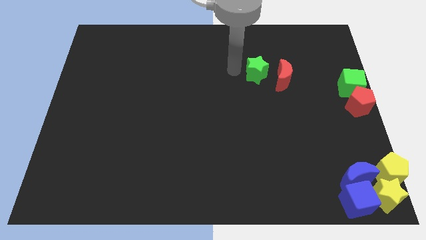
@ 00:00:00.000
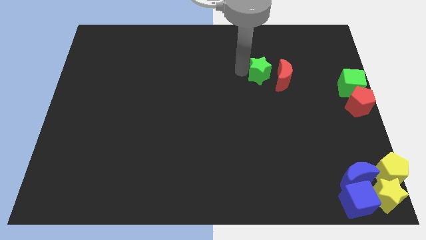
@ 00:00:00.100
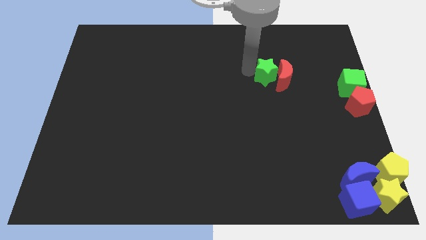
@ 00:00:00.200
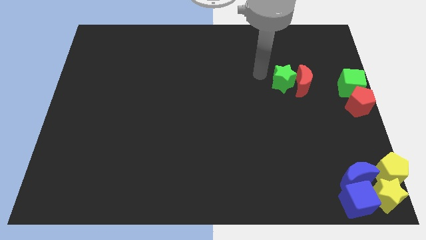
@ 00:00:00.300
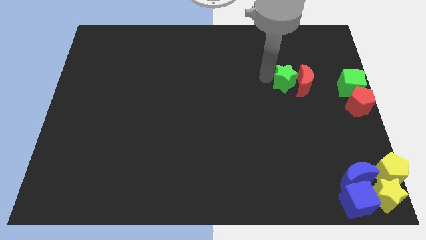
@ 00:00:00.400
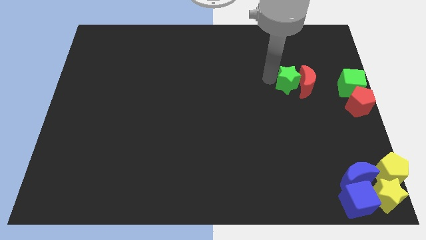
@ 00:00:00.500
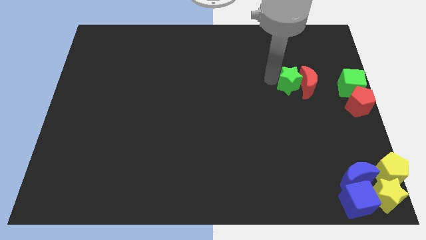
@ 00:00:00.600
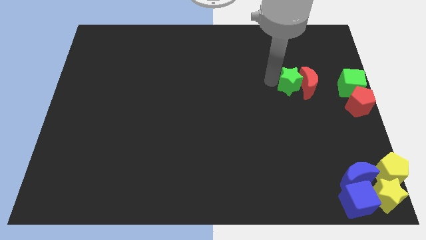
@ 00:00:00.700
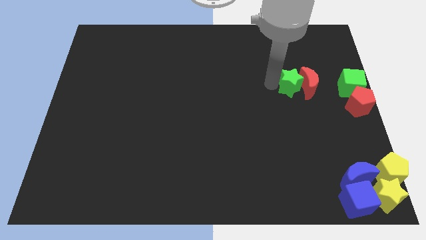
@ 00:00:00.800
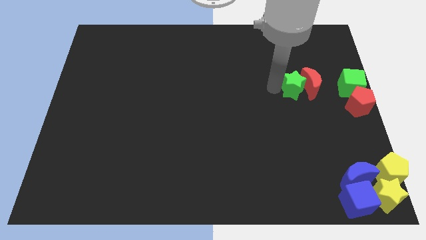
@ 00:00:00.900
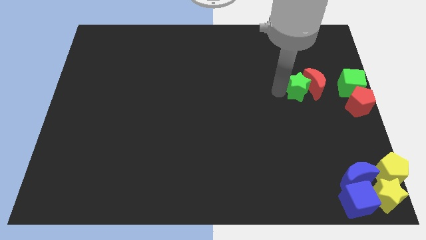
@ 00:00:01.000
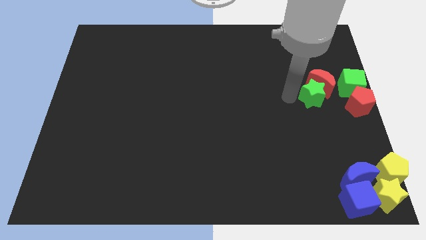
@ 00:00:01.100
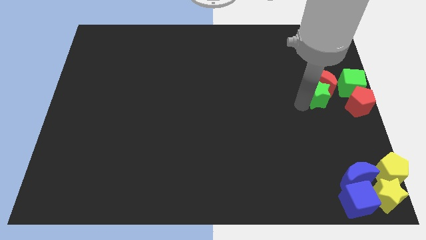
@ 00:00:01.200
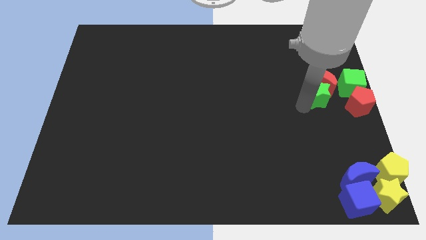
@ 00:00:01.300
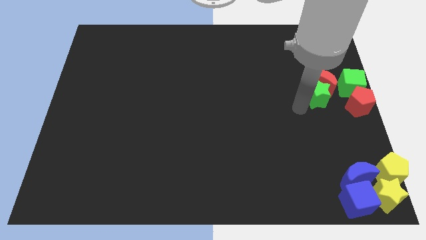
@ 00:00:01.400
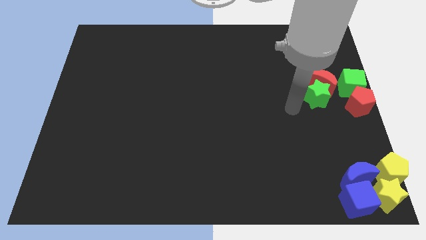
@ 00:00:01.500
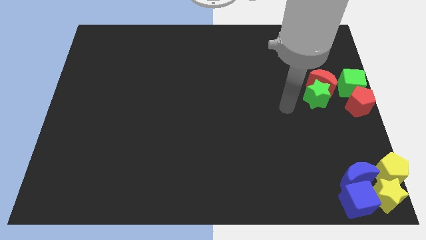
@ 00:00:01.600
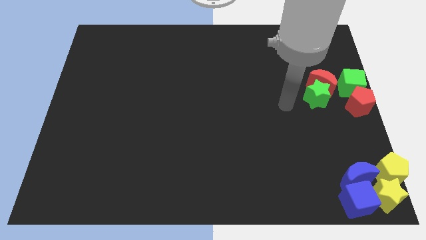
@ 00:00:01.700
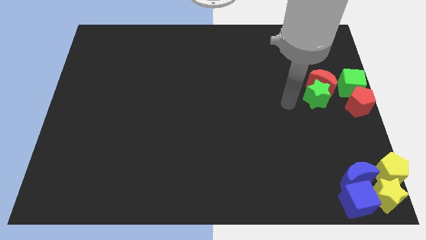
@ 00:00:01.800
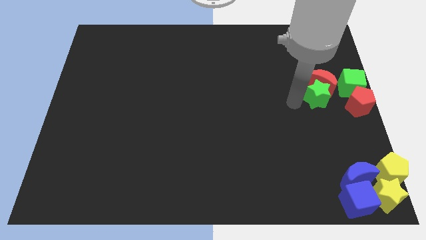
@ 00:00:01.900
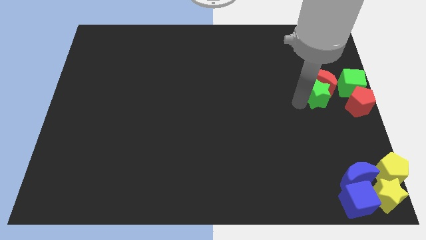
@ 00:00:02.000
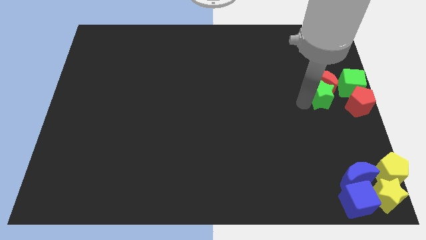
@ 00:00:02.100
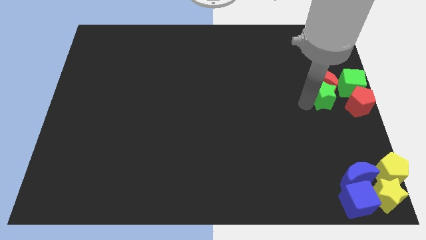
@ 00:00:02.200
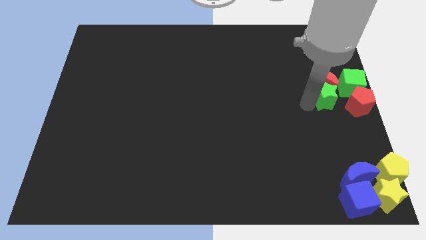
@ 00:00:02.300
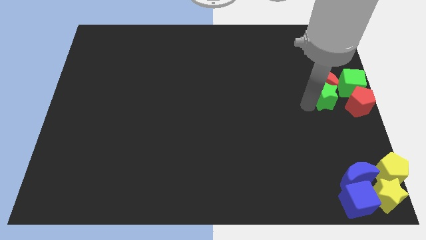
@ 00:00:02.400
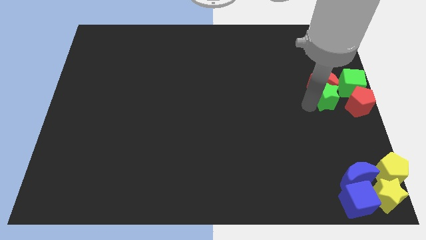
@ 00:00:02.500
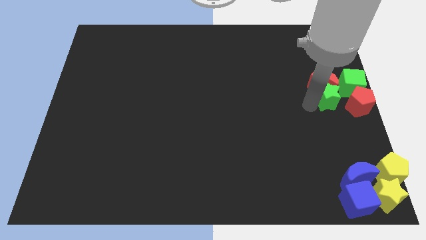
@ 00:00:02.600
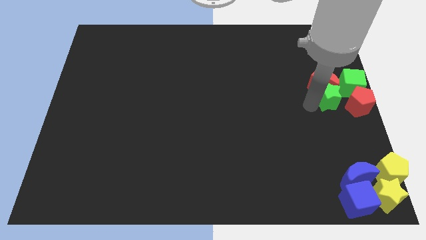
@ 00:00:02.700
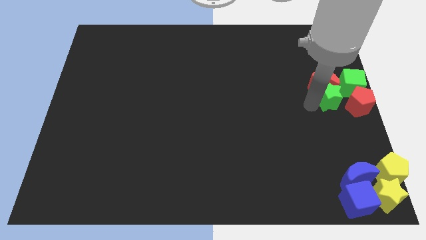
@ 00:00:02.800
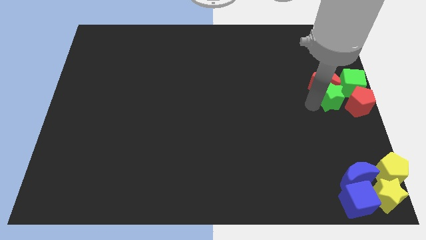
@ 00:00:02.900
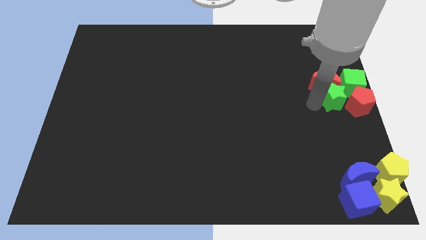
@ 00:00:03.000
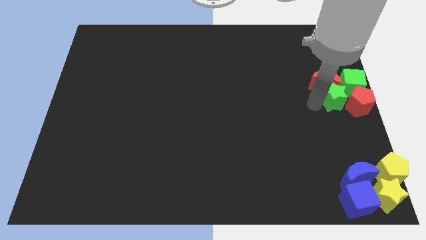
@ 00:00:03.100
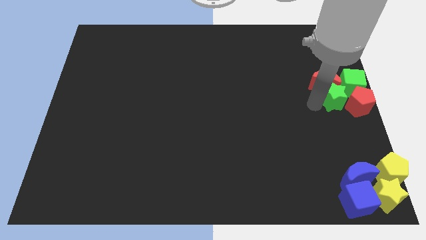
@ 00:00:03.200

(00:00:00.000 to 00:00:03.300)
move the green star into red crescent towards the right center

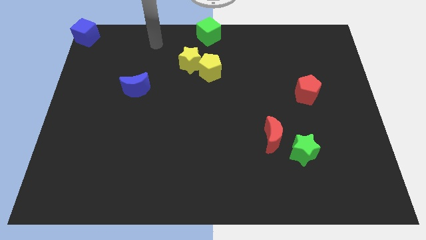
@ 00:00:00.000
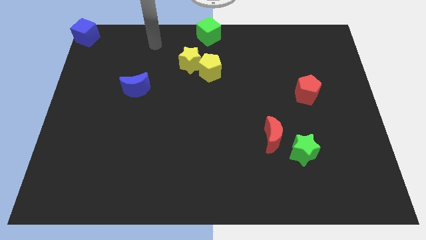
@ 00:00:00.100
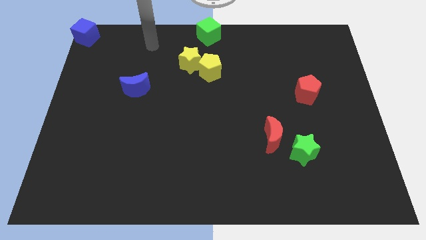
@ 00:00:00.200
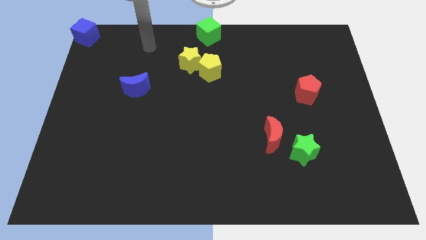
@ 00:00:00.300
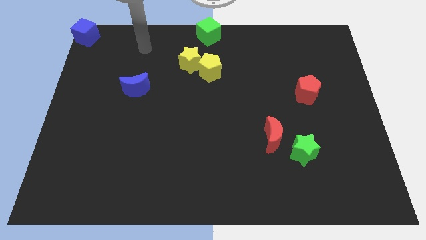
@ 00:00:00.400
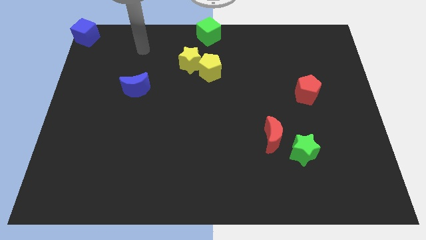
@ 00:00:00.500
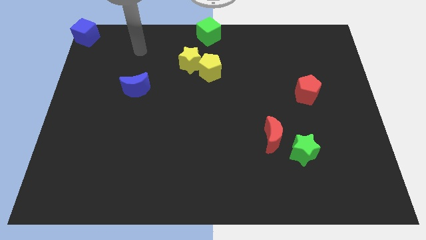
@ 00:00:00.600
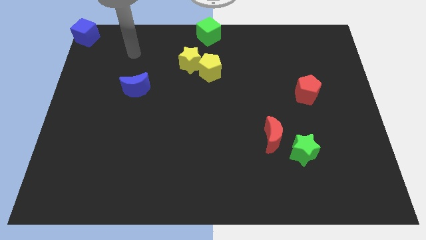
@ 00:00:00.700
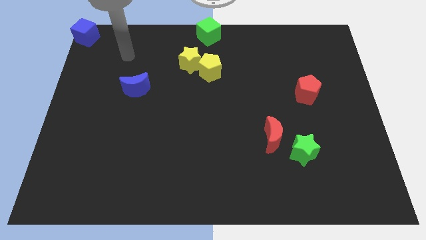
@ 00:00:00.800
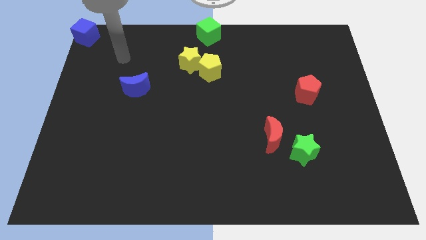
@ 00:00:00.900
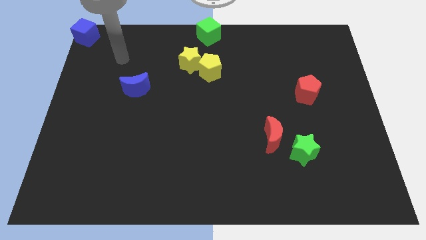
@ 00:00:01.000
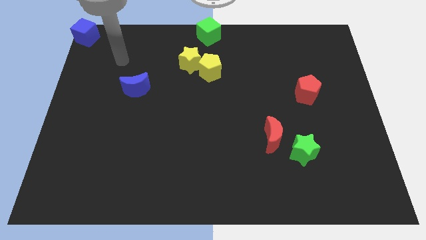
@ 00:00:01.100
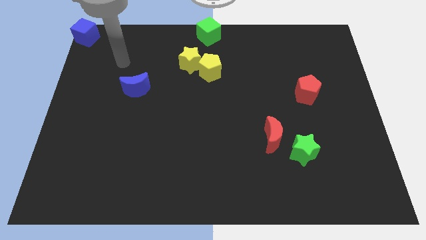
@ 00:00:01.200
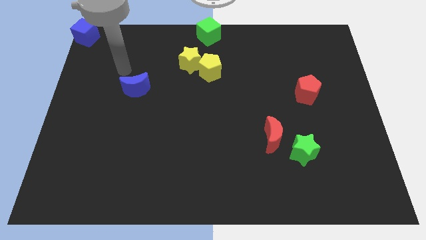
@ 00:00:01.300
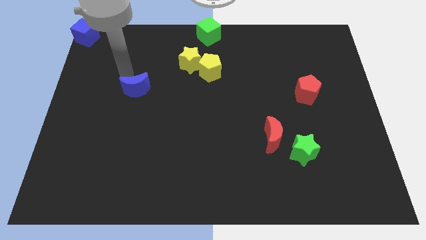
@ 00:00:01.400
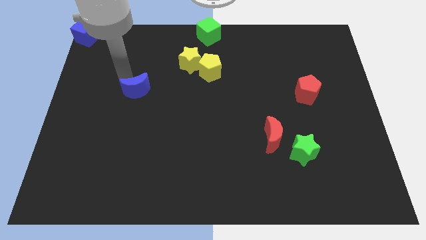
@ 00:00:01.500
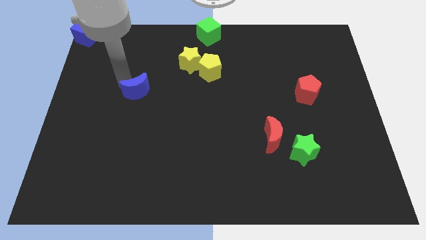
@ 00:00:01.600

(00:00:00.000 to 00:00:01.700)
tap the blue moon

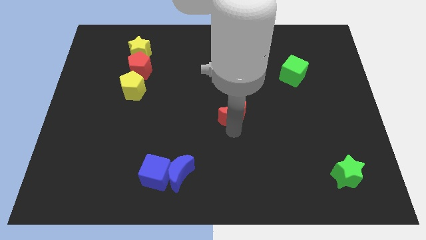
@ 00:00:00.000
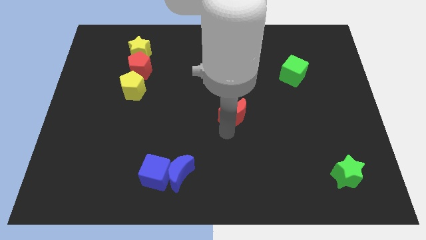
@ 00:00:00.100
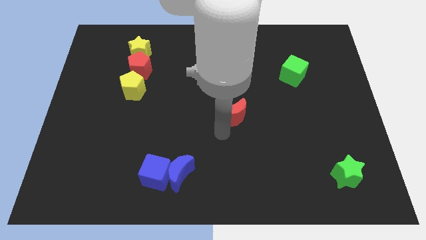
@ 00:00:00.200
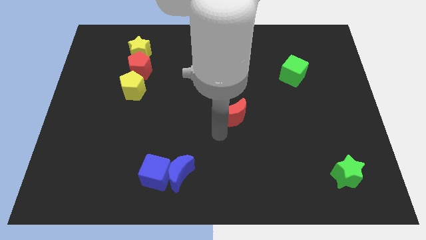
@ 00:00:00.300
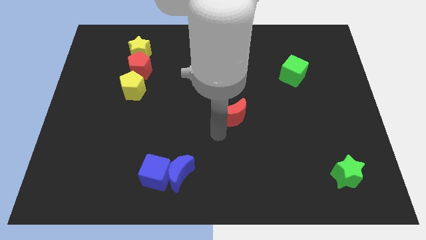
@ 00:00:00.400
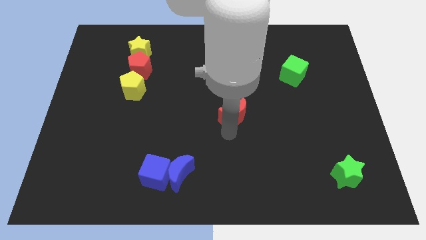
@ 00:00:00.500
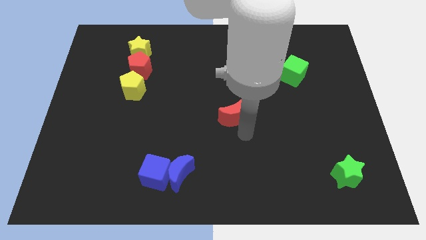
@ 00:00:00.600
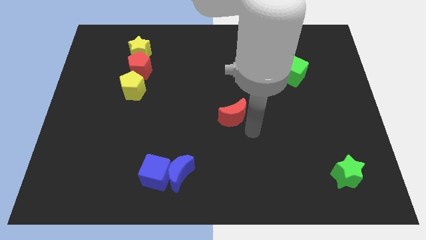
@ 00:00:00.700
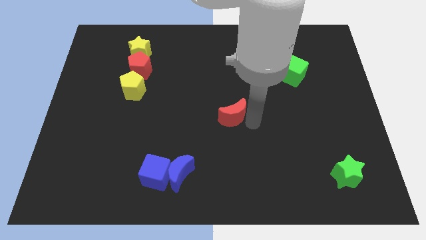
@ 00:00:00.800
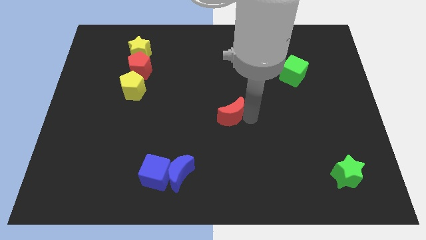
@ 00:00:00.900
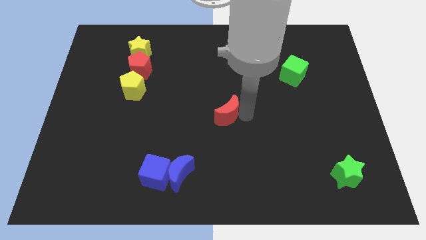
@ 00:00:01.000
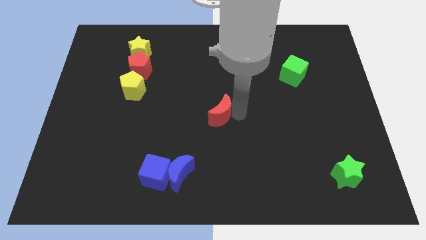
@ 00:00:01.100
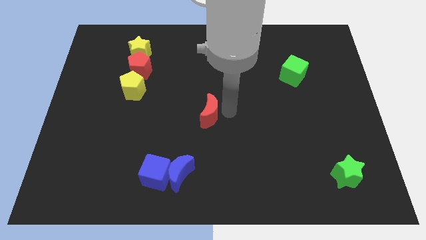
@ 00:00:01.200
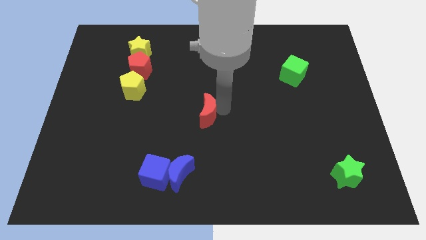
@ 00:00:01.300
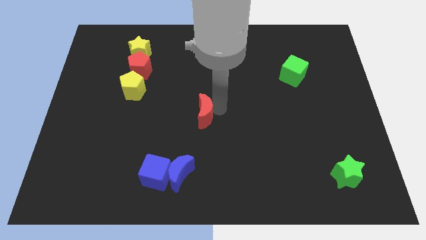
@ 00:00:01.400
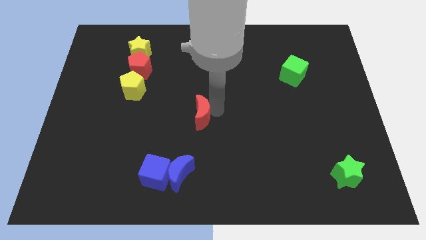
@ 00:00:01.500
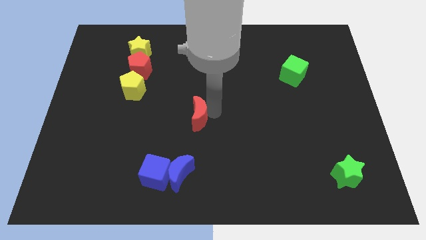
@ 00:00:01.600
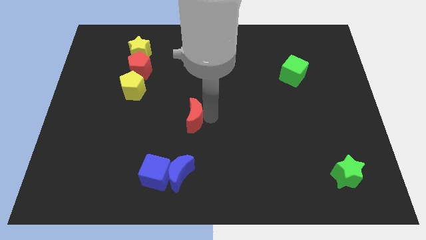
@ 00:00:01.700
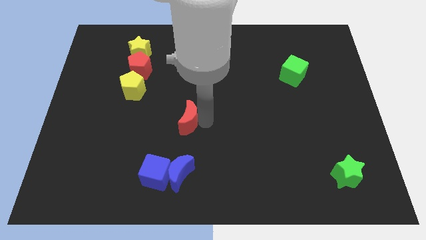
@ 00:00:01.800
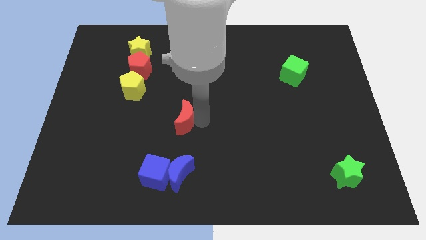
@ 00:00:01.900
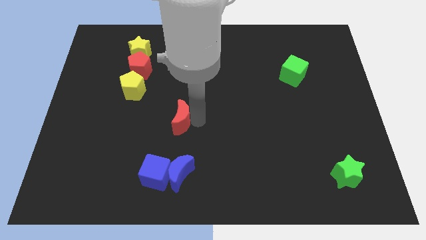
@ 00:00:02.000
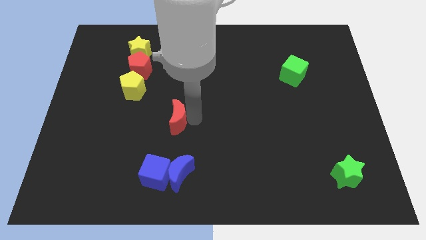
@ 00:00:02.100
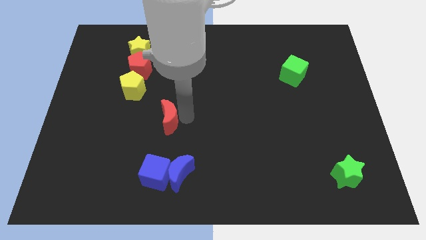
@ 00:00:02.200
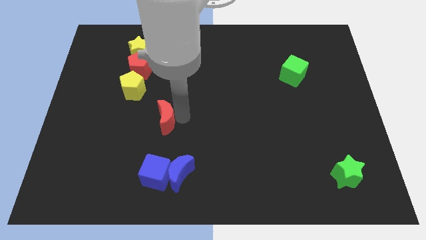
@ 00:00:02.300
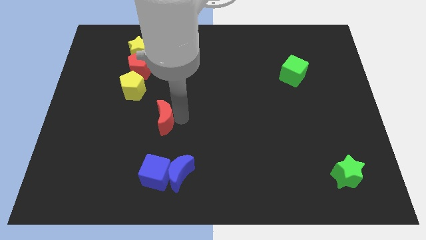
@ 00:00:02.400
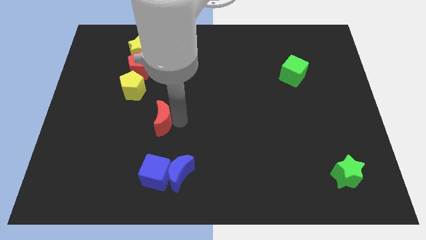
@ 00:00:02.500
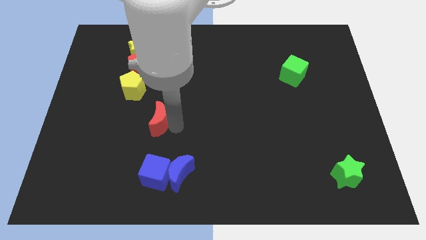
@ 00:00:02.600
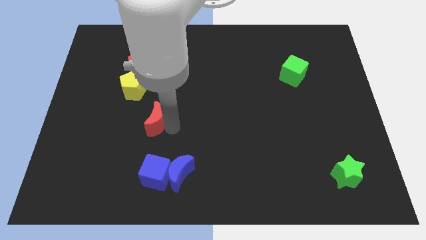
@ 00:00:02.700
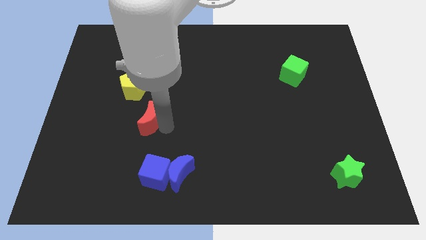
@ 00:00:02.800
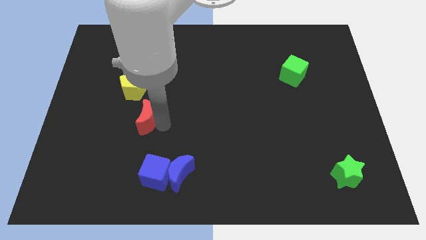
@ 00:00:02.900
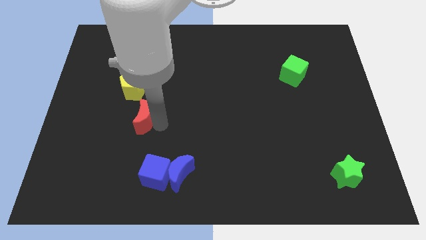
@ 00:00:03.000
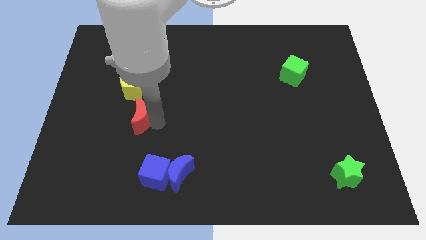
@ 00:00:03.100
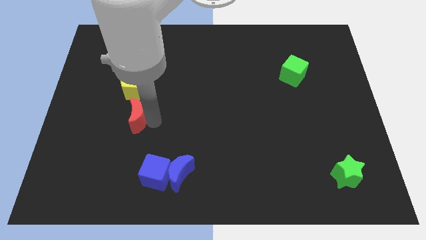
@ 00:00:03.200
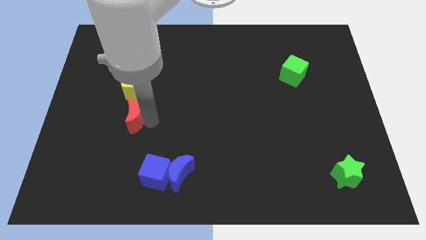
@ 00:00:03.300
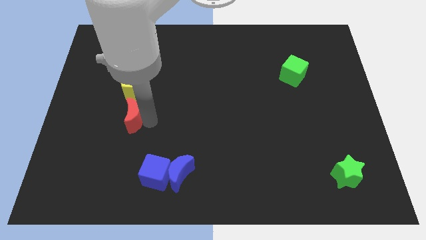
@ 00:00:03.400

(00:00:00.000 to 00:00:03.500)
place red moon to the bottom of yellow pentagon

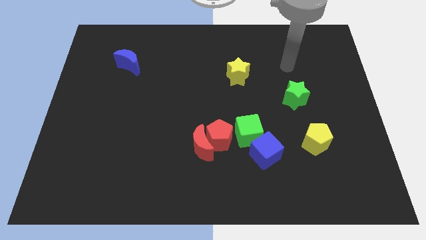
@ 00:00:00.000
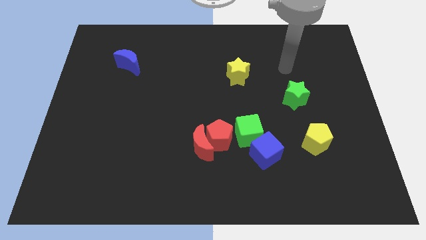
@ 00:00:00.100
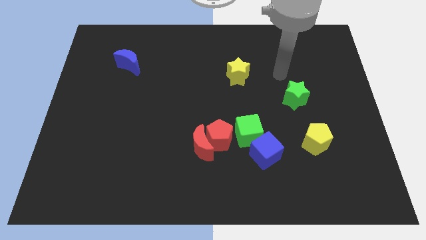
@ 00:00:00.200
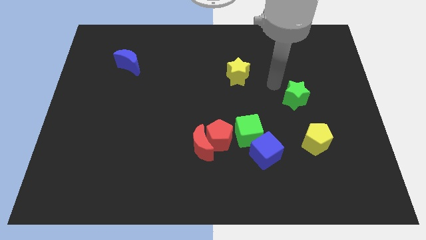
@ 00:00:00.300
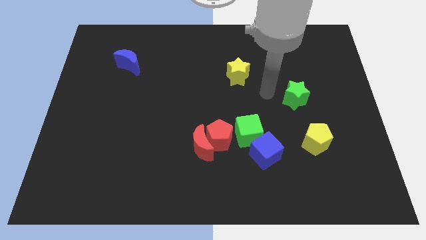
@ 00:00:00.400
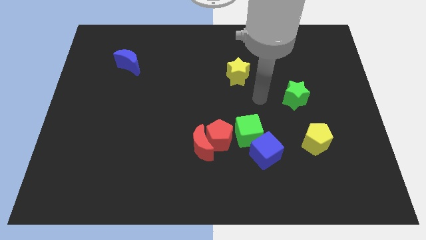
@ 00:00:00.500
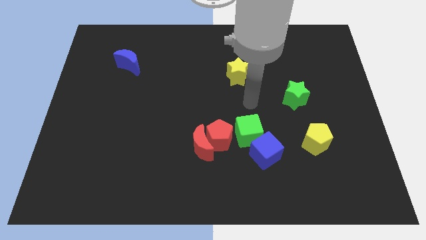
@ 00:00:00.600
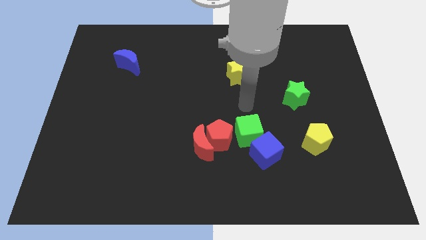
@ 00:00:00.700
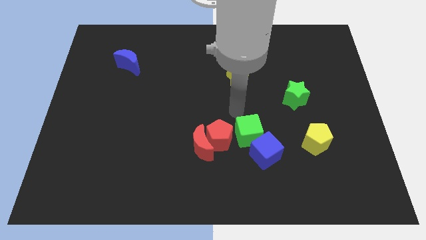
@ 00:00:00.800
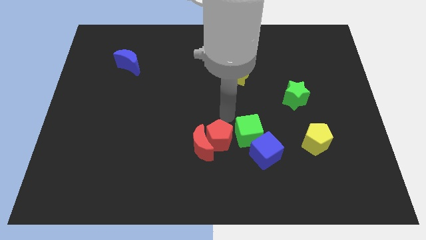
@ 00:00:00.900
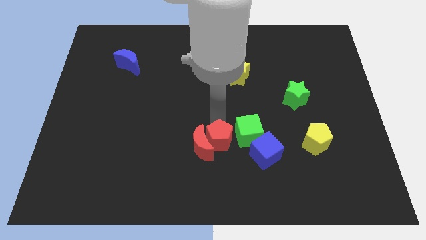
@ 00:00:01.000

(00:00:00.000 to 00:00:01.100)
place your arm at the top side of the red pentagon
